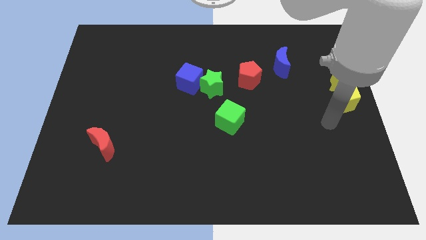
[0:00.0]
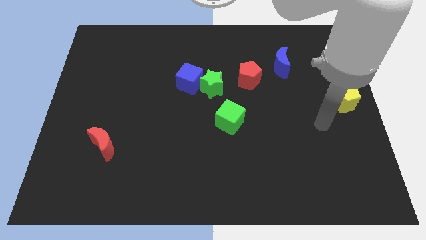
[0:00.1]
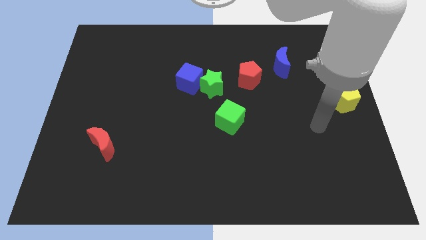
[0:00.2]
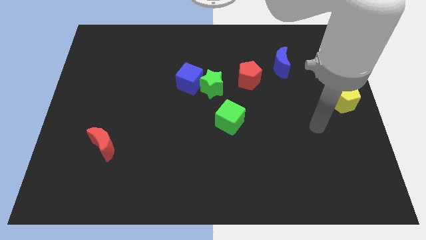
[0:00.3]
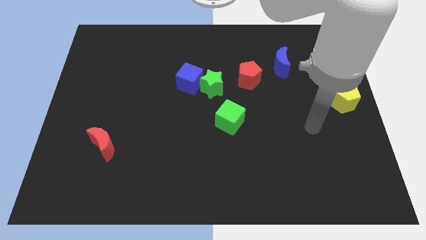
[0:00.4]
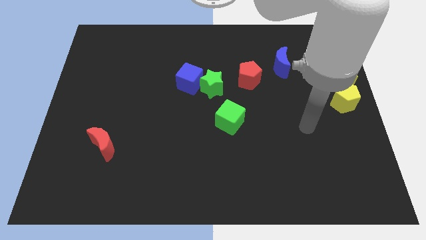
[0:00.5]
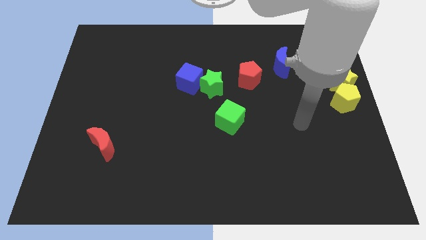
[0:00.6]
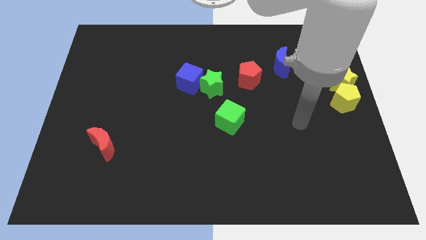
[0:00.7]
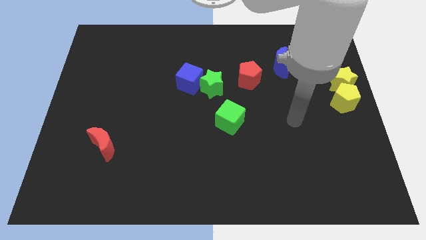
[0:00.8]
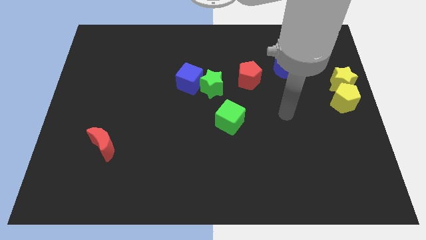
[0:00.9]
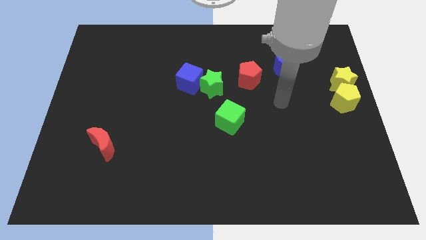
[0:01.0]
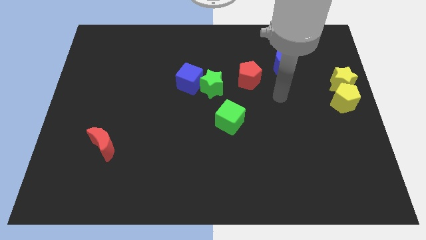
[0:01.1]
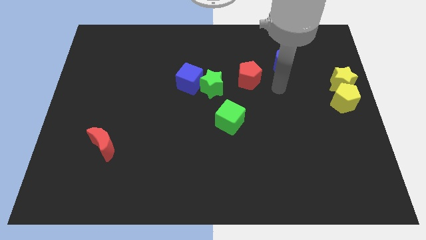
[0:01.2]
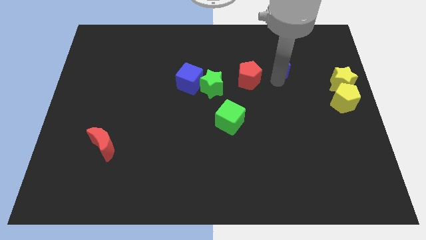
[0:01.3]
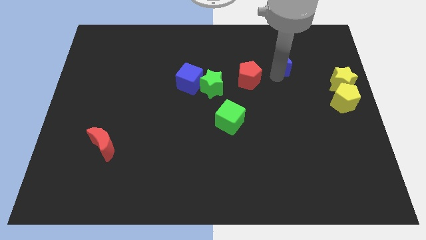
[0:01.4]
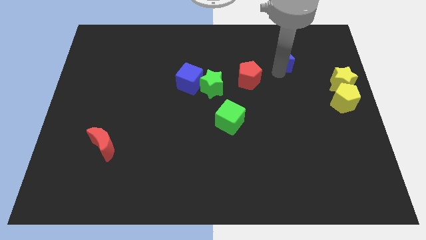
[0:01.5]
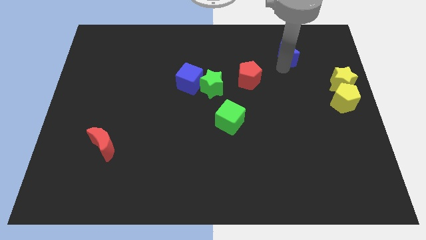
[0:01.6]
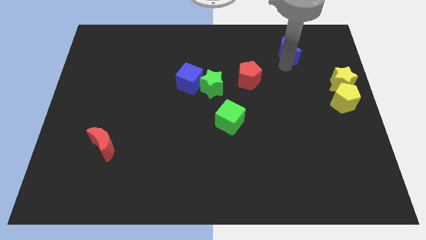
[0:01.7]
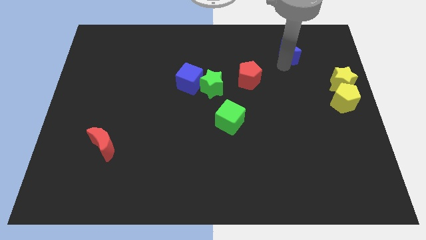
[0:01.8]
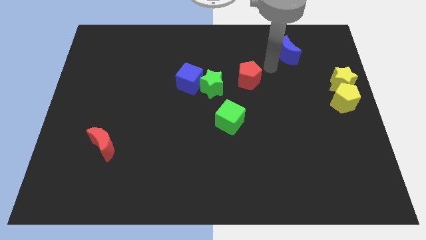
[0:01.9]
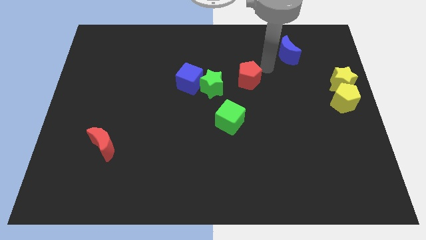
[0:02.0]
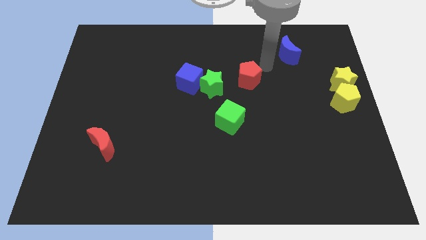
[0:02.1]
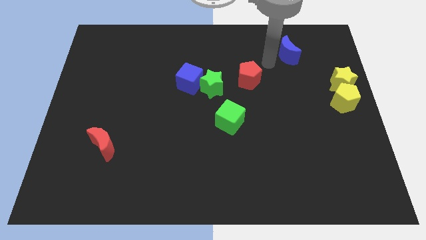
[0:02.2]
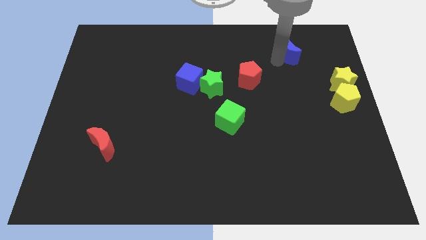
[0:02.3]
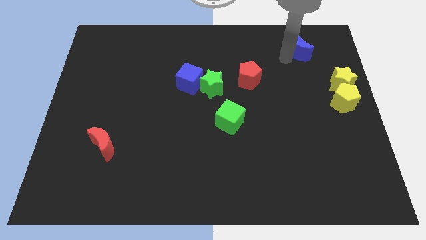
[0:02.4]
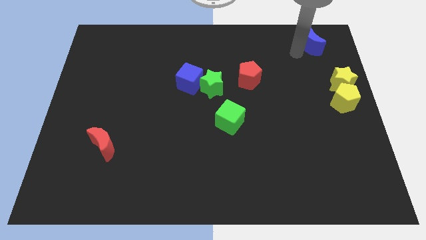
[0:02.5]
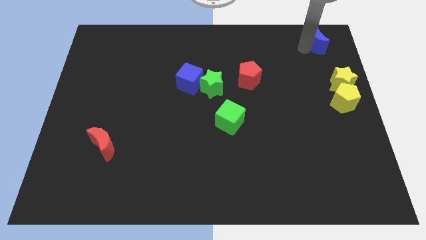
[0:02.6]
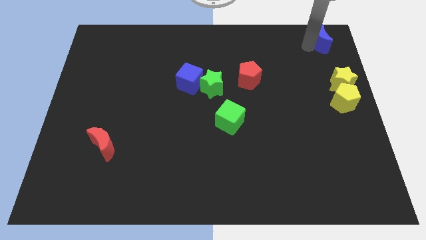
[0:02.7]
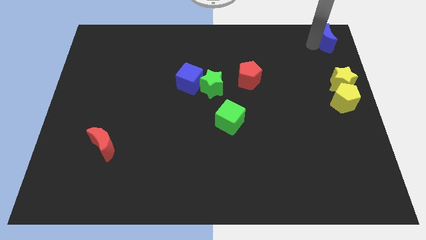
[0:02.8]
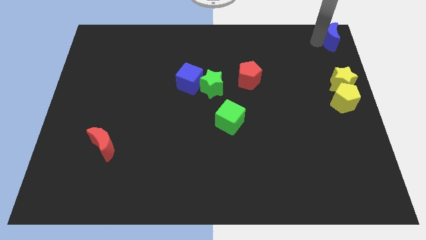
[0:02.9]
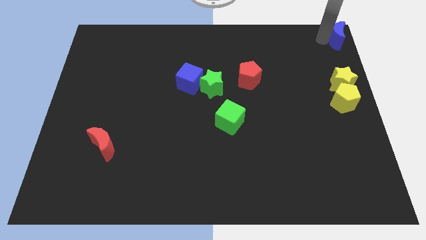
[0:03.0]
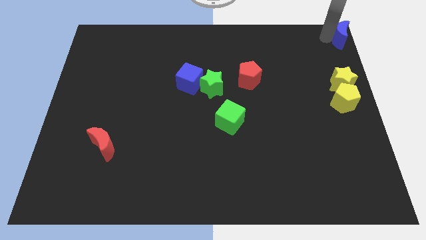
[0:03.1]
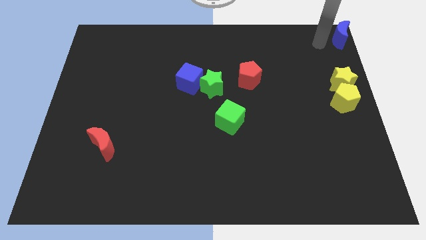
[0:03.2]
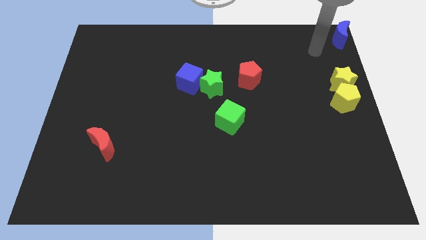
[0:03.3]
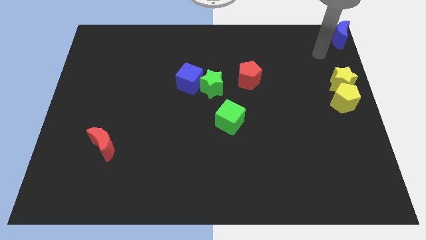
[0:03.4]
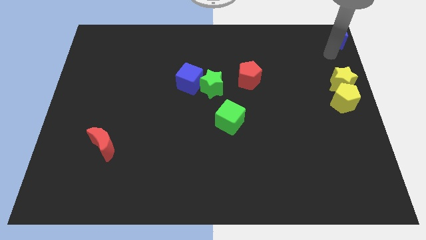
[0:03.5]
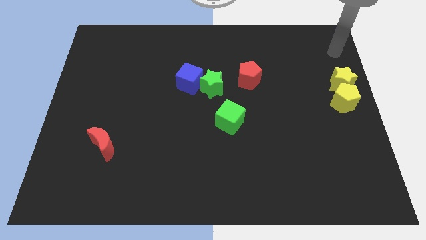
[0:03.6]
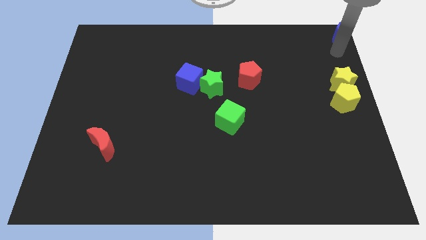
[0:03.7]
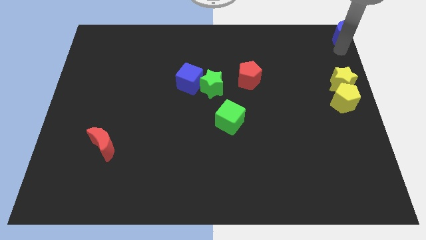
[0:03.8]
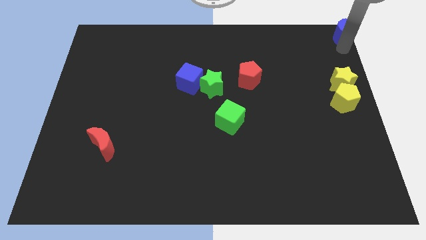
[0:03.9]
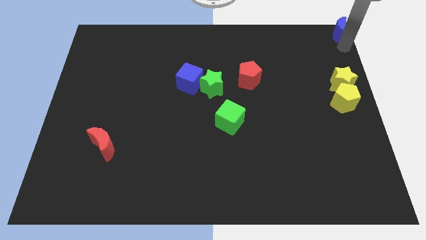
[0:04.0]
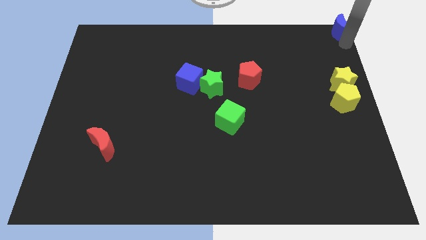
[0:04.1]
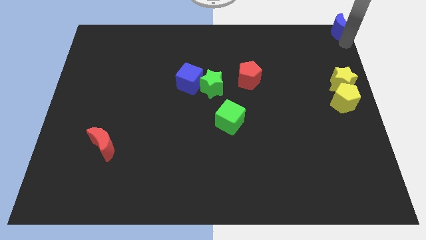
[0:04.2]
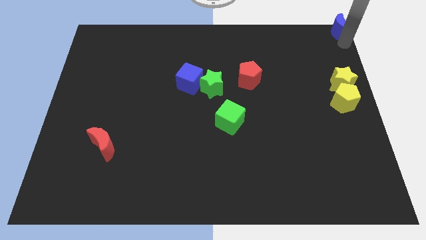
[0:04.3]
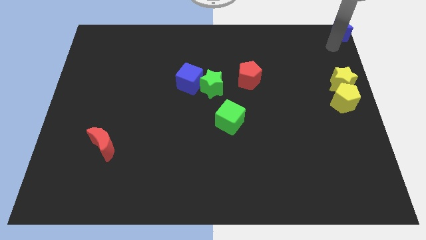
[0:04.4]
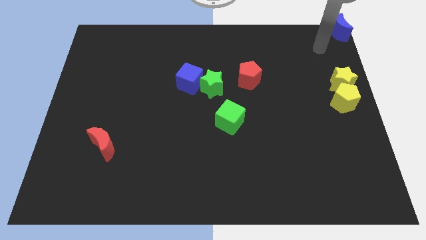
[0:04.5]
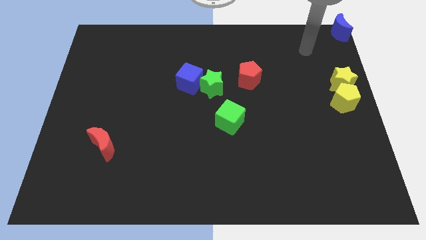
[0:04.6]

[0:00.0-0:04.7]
place the blue crescent to the top right corner of the board

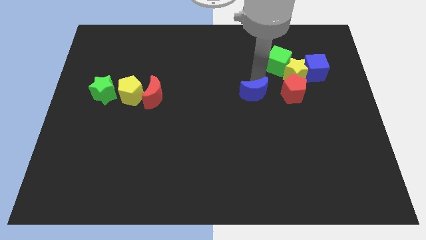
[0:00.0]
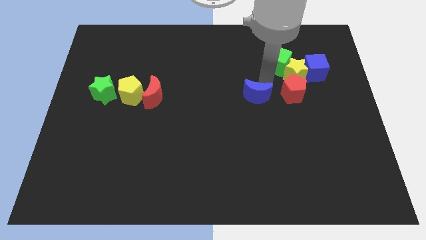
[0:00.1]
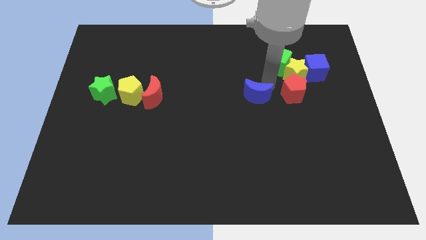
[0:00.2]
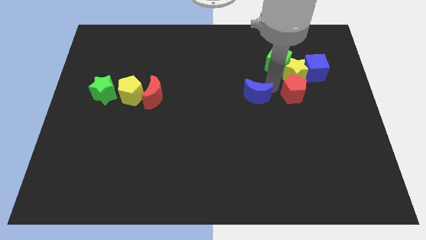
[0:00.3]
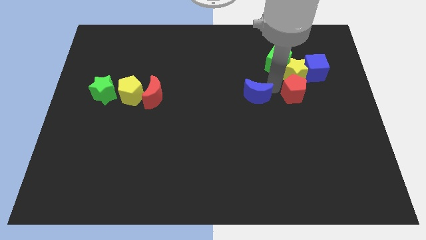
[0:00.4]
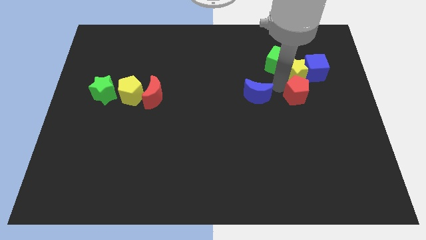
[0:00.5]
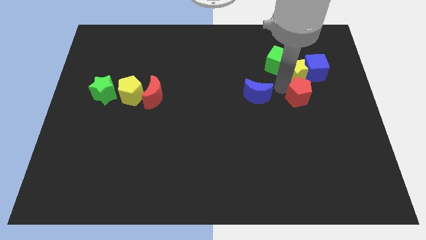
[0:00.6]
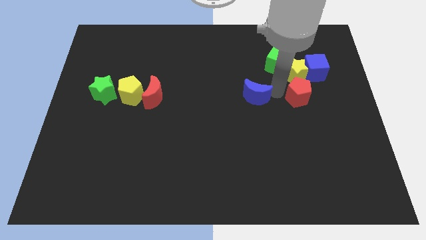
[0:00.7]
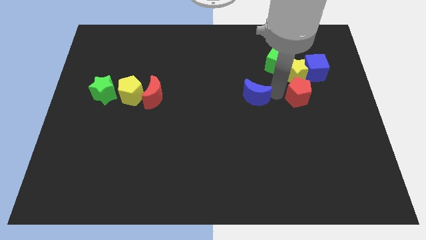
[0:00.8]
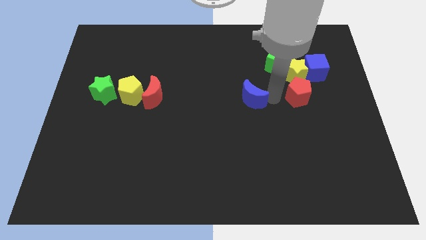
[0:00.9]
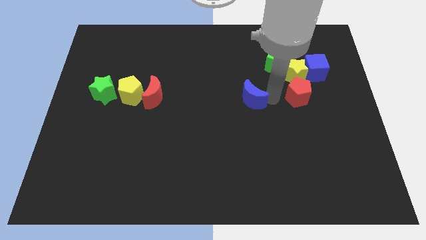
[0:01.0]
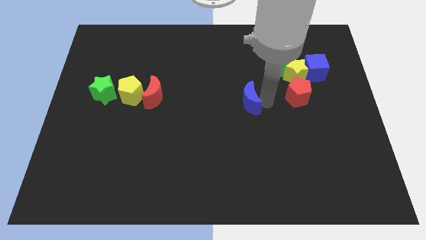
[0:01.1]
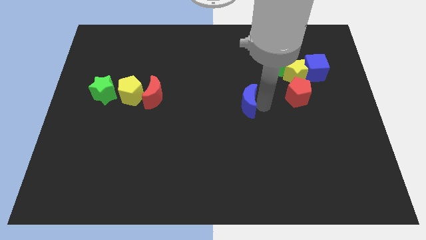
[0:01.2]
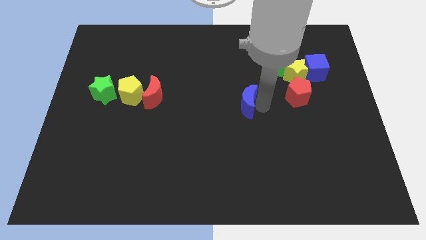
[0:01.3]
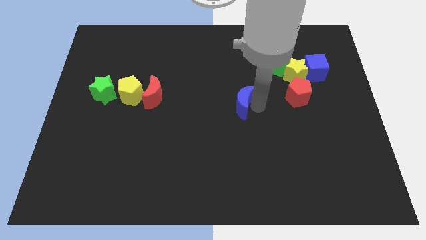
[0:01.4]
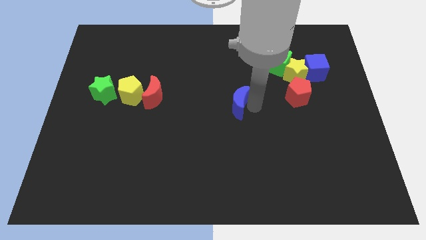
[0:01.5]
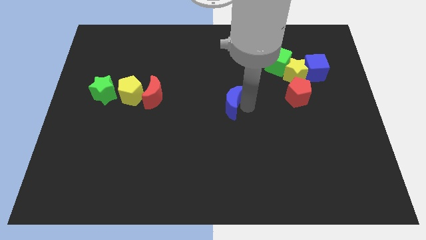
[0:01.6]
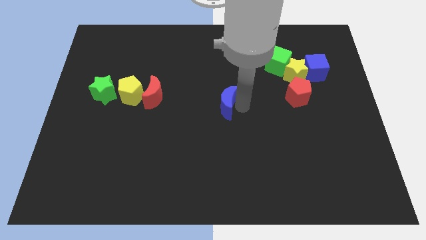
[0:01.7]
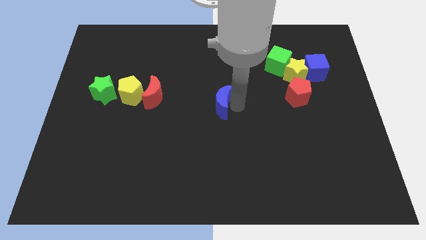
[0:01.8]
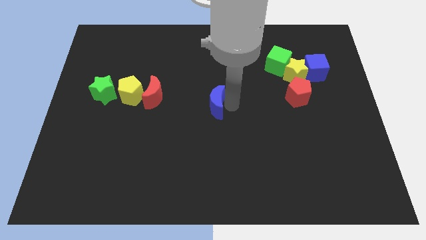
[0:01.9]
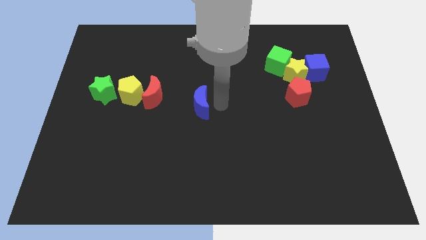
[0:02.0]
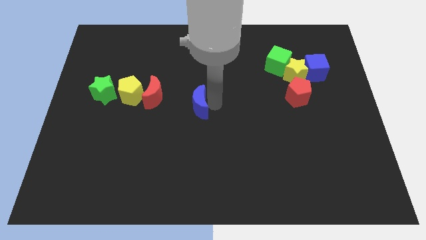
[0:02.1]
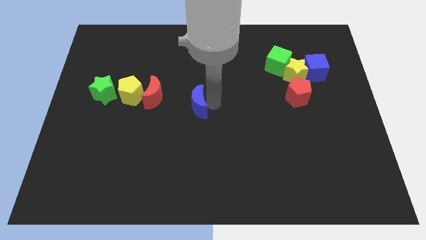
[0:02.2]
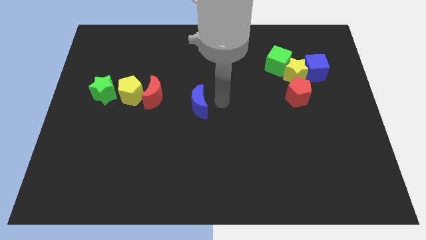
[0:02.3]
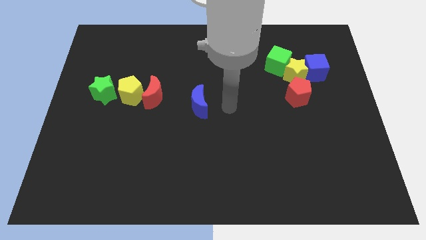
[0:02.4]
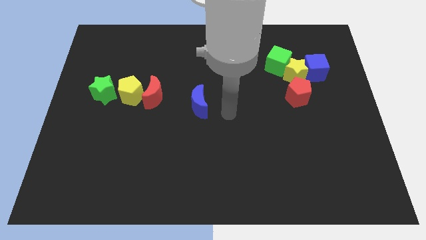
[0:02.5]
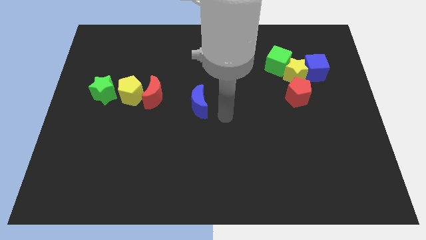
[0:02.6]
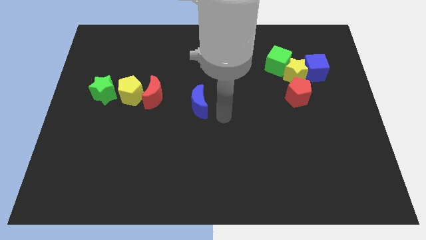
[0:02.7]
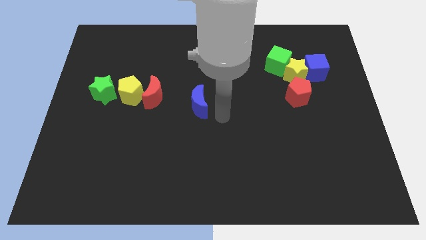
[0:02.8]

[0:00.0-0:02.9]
move the blue crescent to the center of the board

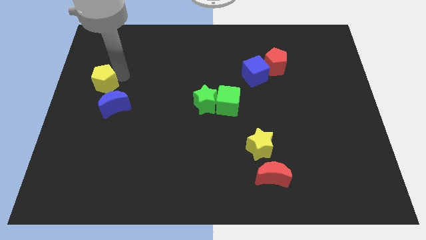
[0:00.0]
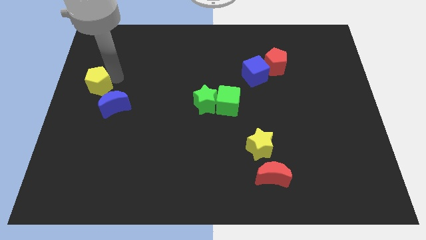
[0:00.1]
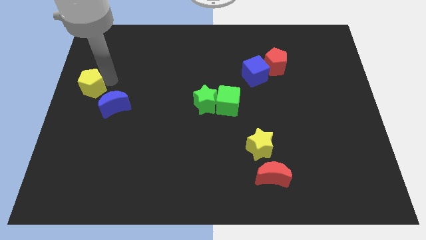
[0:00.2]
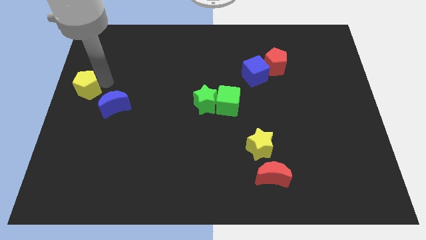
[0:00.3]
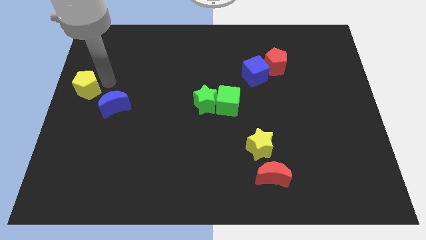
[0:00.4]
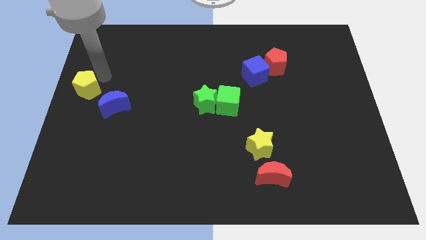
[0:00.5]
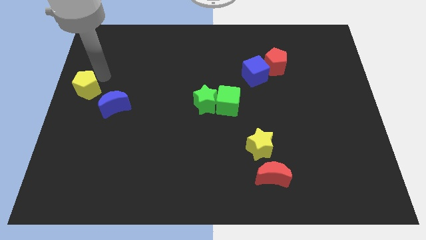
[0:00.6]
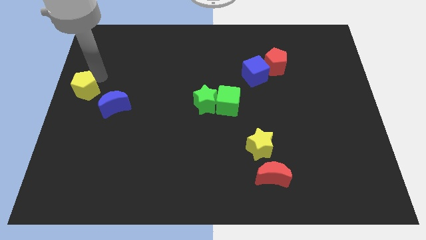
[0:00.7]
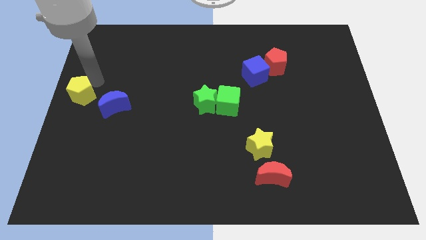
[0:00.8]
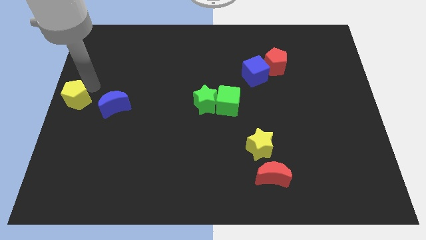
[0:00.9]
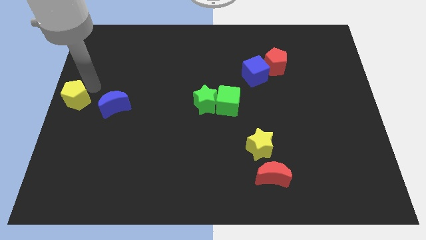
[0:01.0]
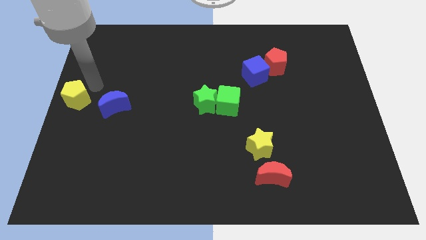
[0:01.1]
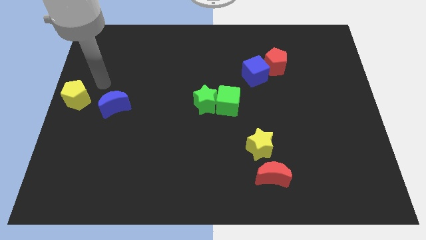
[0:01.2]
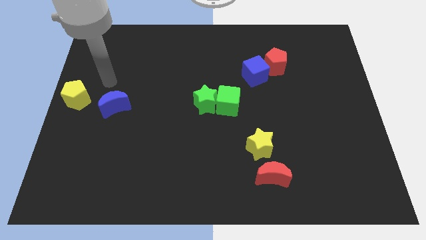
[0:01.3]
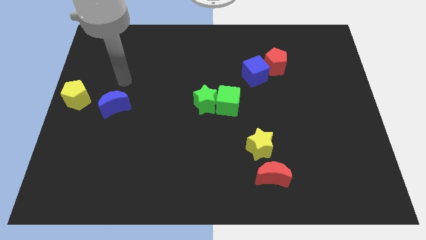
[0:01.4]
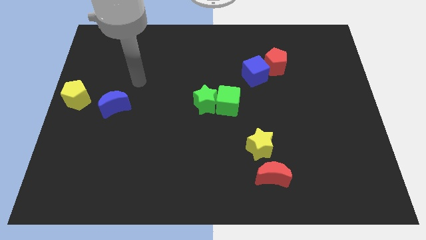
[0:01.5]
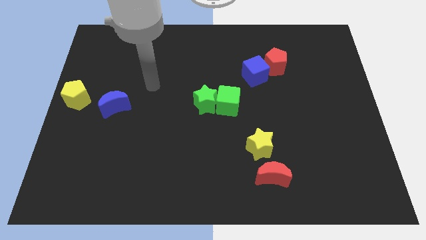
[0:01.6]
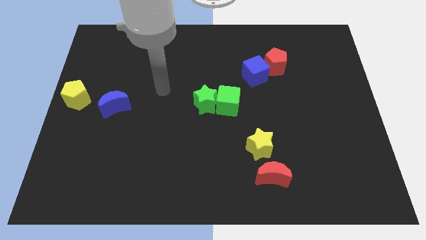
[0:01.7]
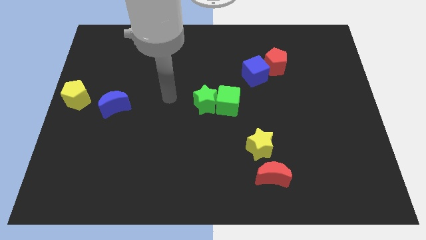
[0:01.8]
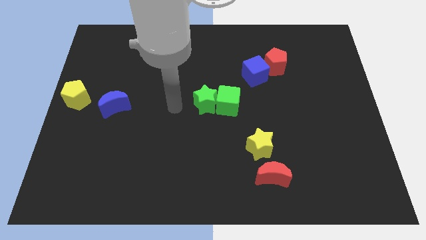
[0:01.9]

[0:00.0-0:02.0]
place the yellow pentagon to the left center of the board
